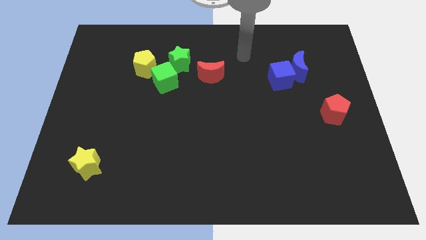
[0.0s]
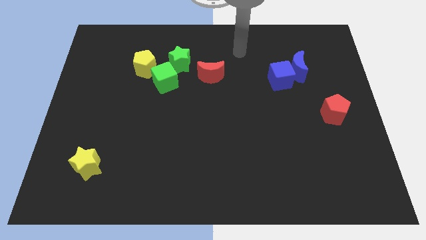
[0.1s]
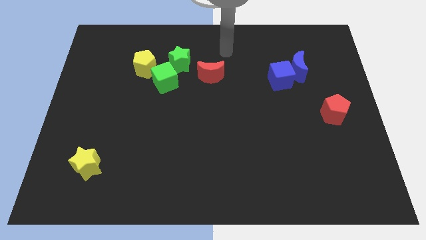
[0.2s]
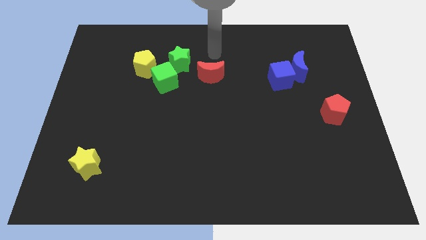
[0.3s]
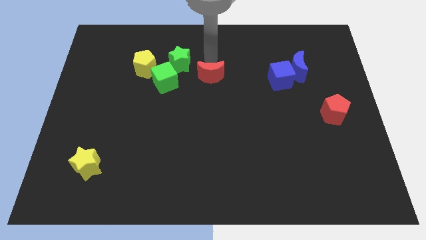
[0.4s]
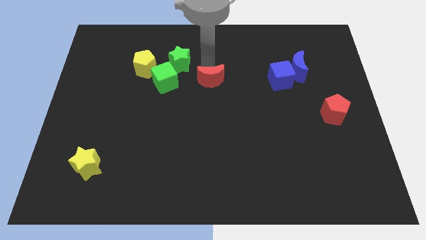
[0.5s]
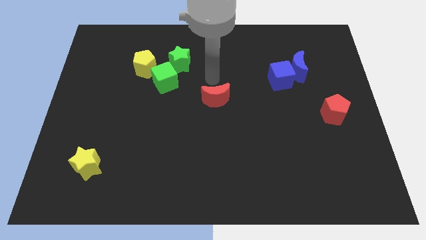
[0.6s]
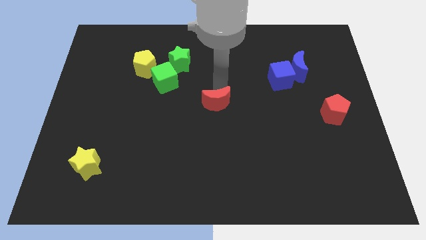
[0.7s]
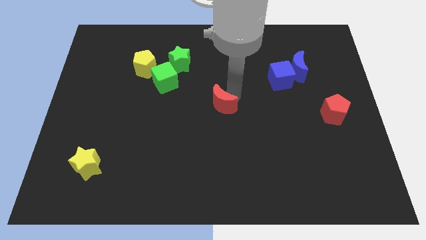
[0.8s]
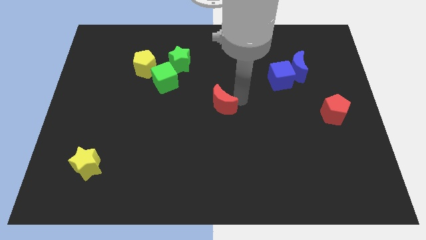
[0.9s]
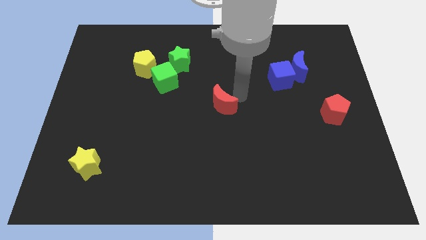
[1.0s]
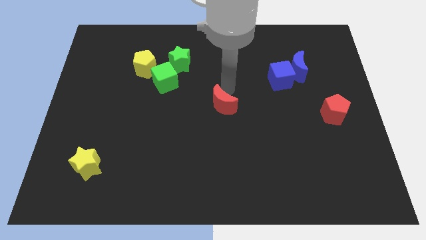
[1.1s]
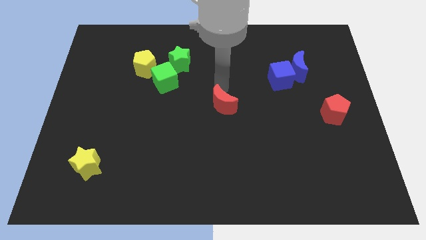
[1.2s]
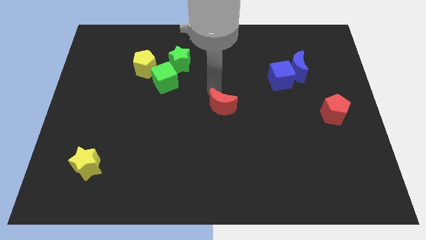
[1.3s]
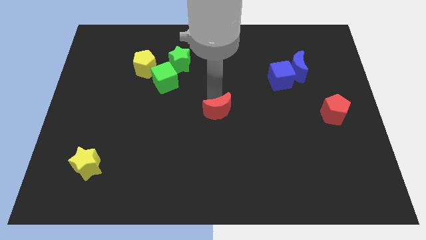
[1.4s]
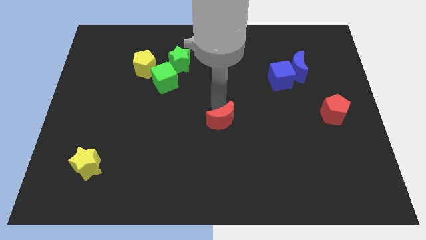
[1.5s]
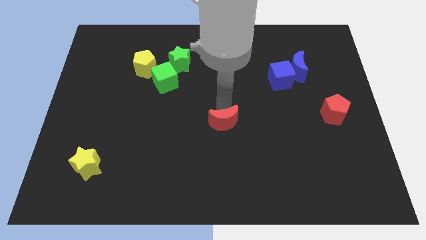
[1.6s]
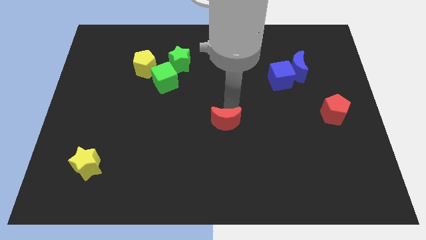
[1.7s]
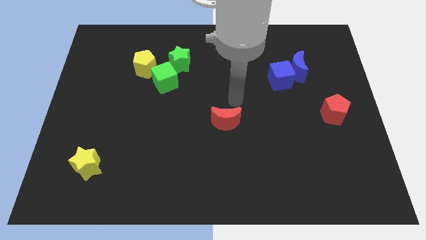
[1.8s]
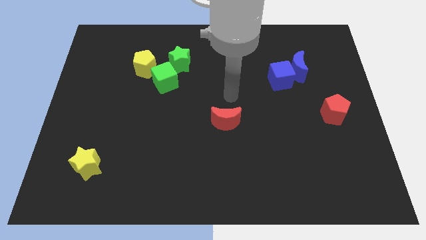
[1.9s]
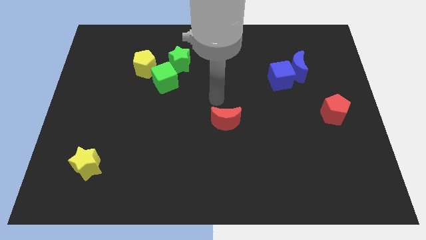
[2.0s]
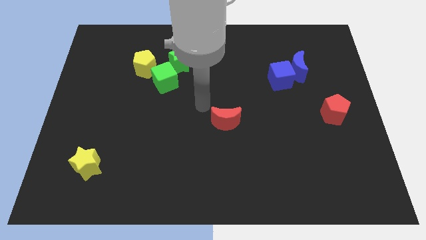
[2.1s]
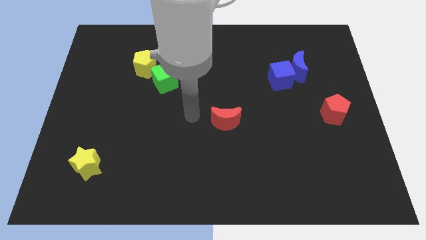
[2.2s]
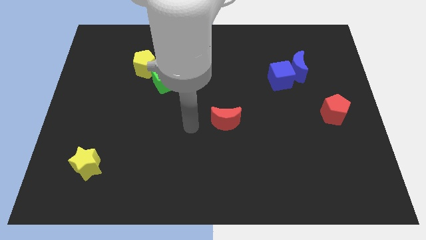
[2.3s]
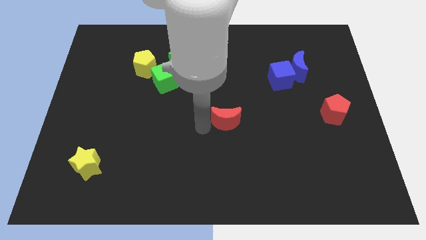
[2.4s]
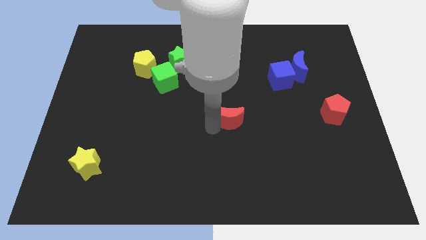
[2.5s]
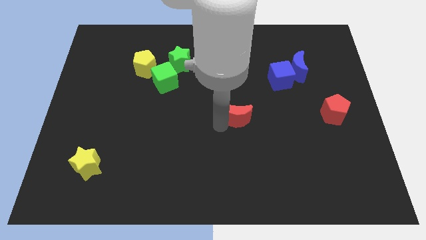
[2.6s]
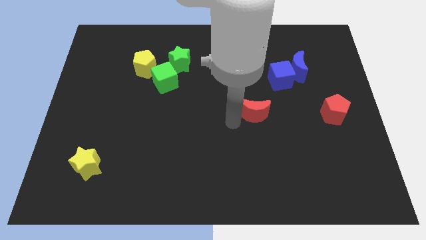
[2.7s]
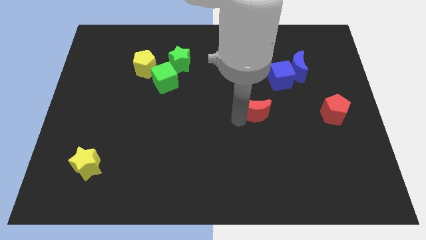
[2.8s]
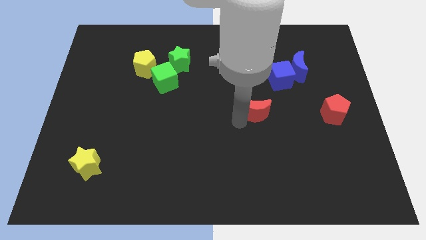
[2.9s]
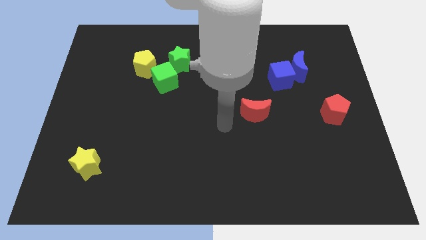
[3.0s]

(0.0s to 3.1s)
place the red moon parallel to red pentagon

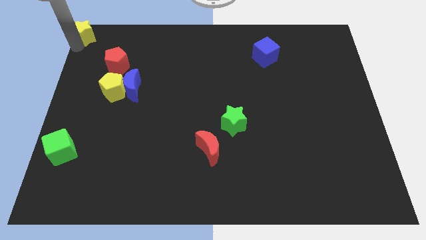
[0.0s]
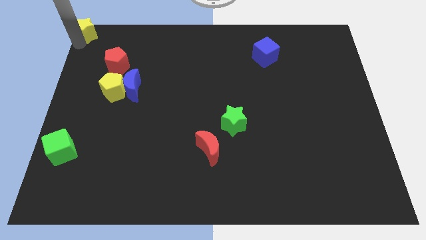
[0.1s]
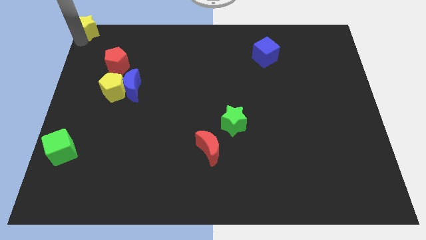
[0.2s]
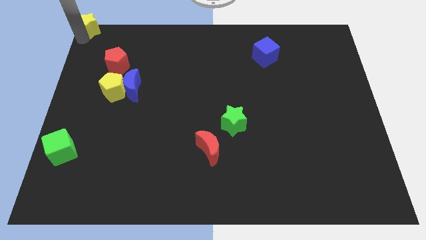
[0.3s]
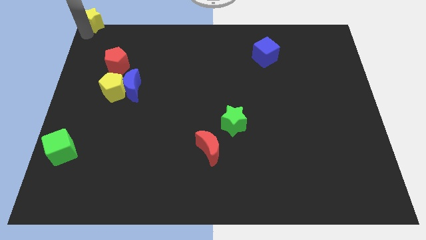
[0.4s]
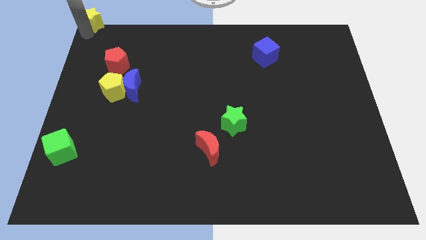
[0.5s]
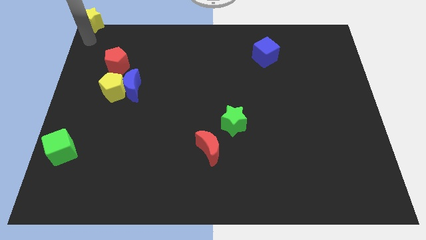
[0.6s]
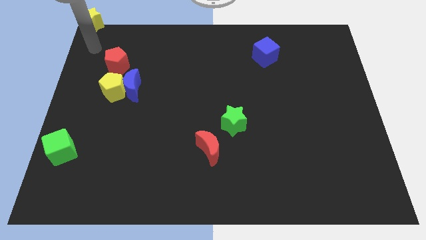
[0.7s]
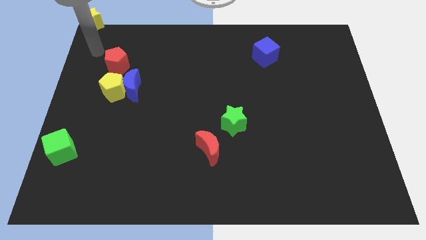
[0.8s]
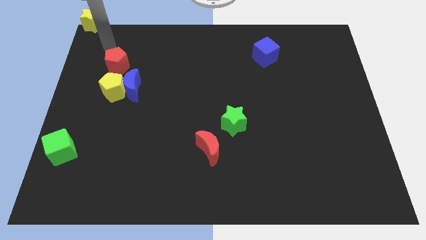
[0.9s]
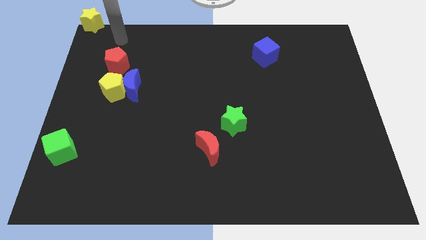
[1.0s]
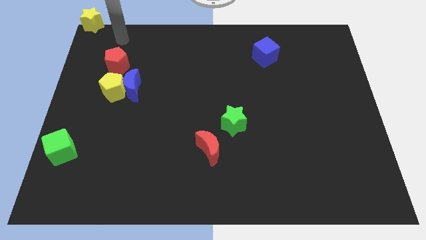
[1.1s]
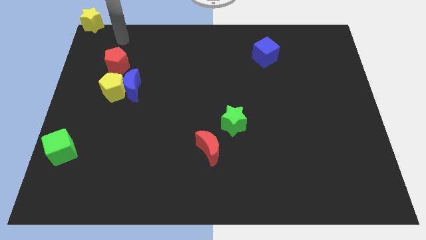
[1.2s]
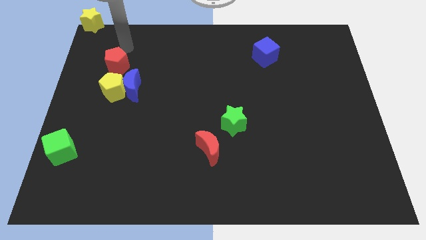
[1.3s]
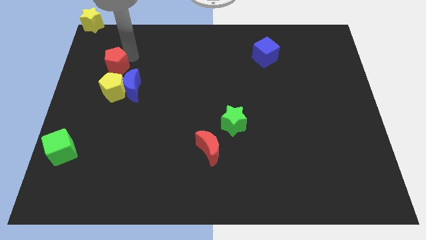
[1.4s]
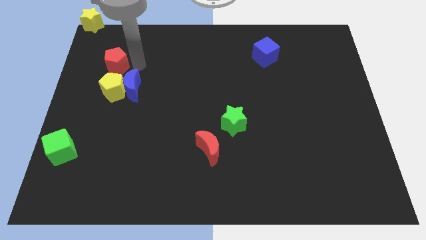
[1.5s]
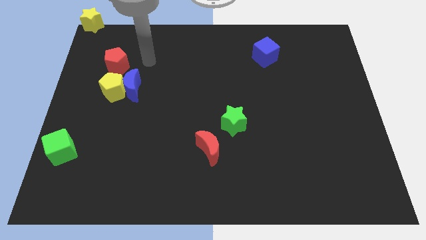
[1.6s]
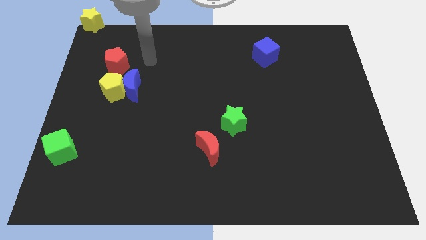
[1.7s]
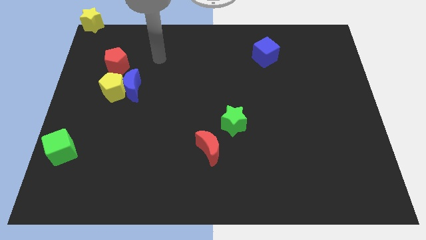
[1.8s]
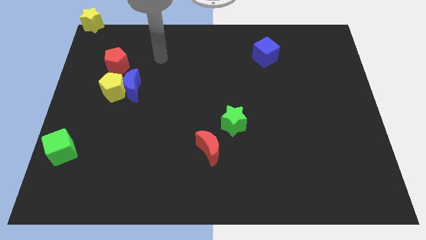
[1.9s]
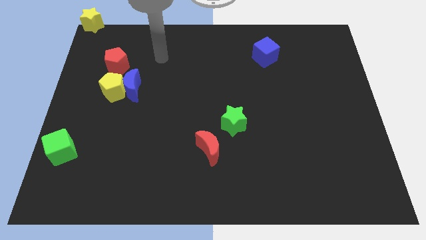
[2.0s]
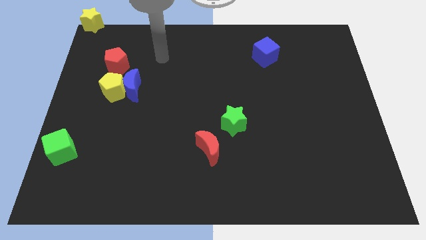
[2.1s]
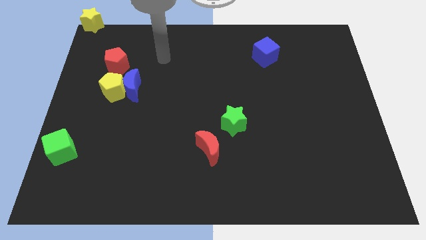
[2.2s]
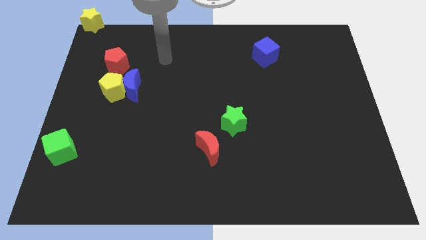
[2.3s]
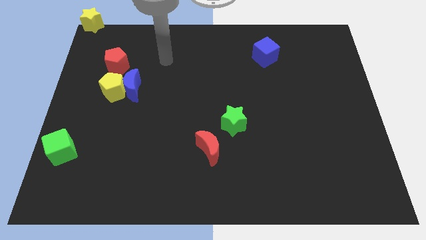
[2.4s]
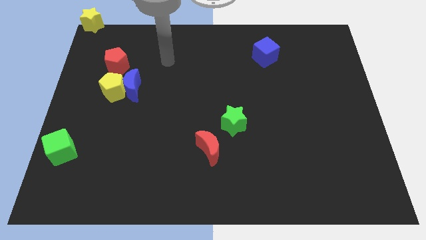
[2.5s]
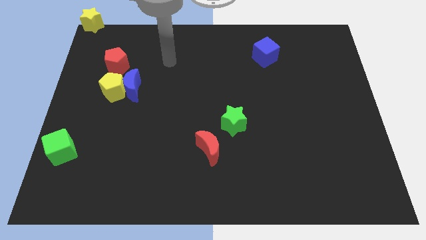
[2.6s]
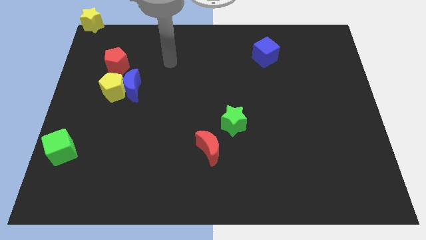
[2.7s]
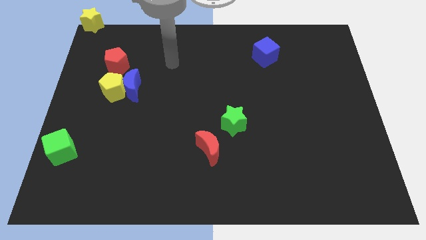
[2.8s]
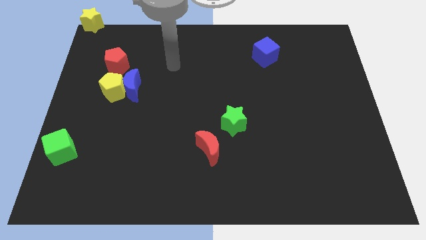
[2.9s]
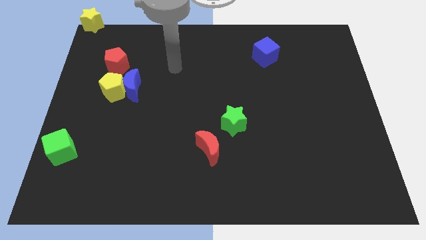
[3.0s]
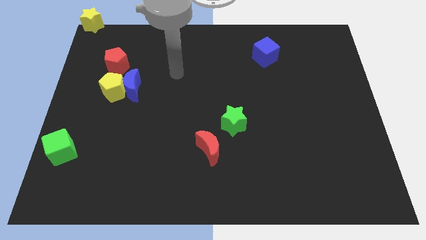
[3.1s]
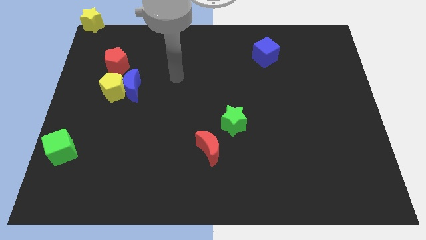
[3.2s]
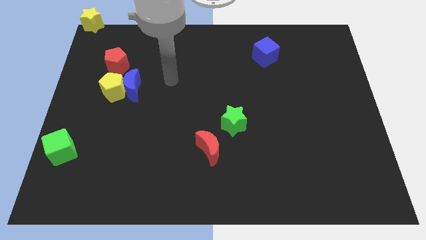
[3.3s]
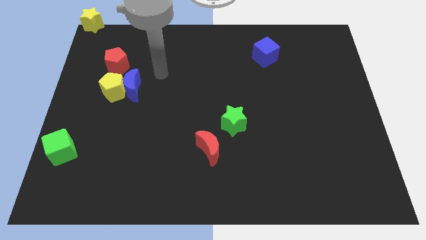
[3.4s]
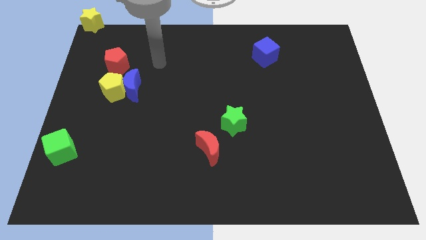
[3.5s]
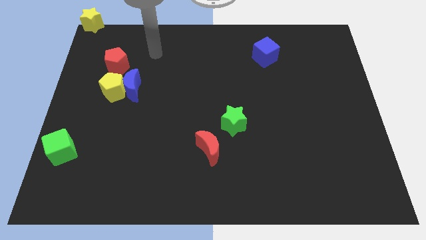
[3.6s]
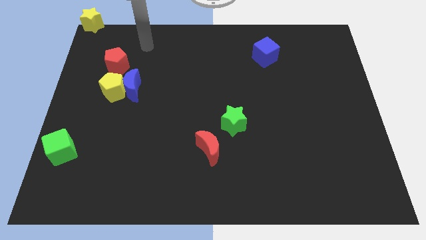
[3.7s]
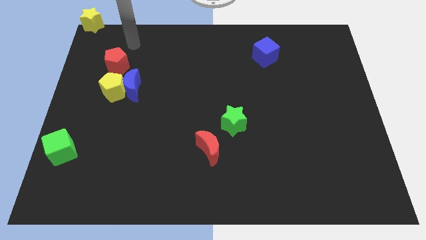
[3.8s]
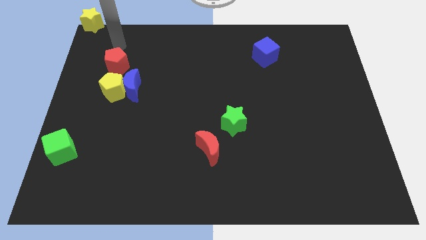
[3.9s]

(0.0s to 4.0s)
place your arm above the red pentagon

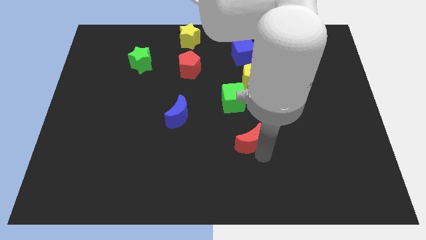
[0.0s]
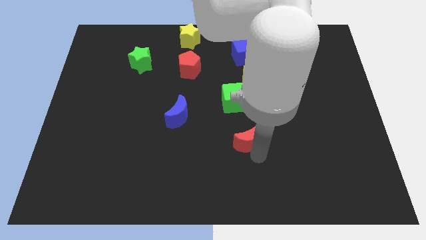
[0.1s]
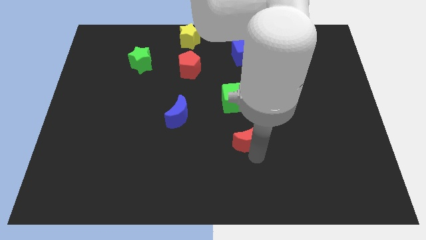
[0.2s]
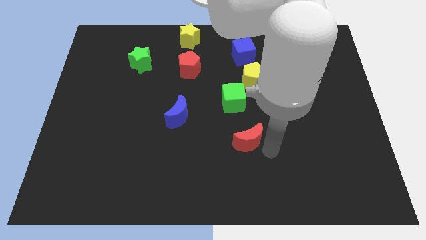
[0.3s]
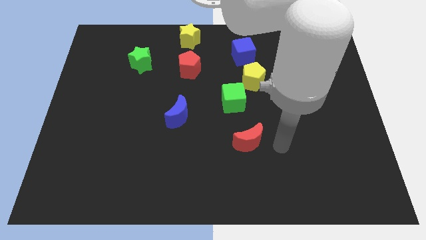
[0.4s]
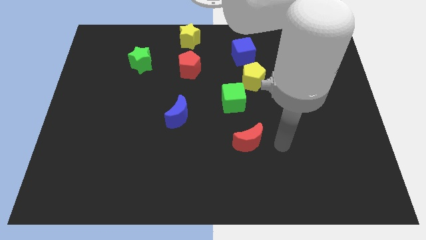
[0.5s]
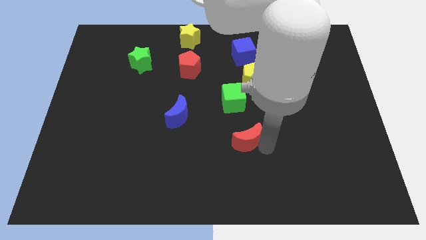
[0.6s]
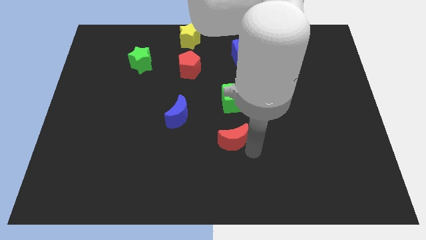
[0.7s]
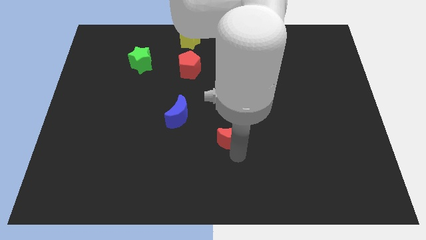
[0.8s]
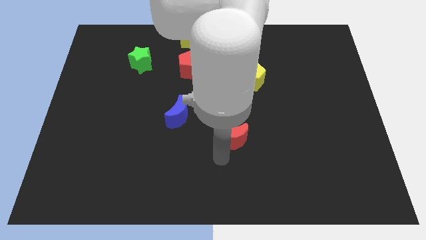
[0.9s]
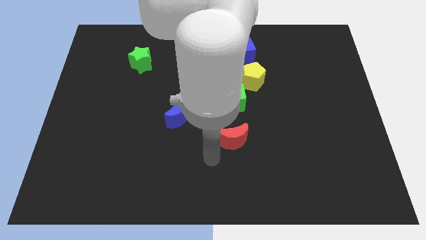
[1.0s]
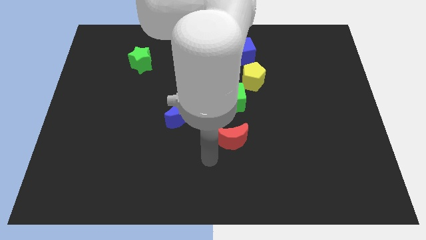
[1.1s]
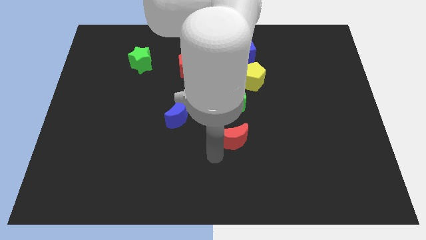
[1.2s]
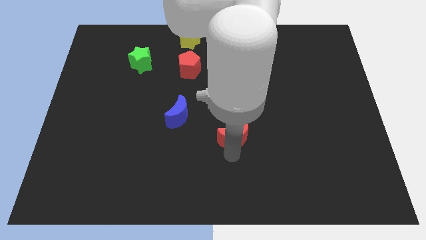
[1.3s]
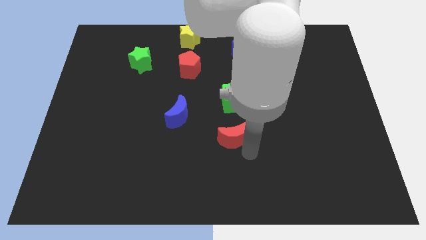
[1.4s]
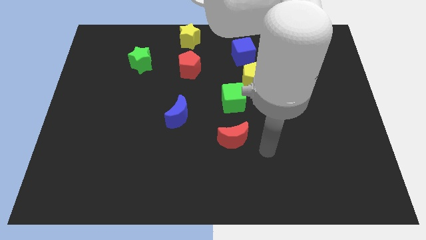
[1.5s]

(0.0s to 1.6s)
adjust the red moon vertically below the green cube

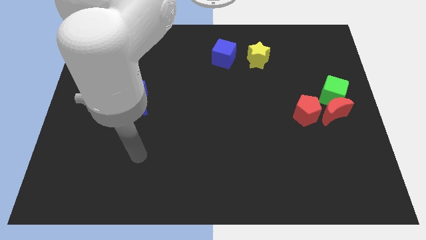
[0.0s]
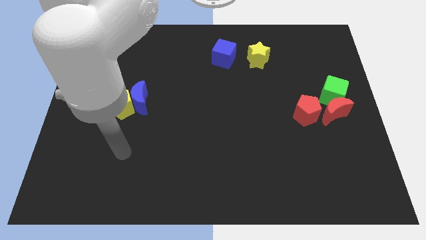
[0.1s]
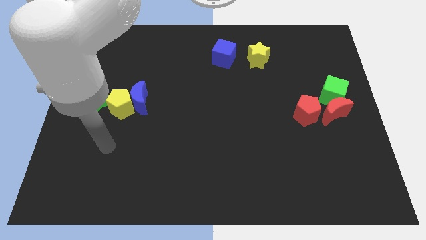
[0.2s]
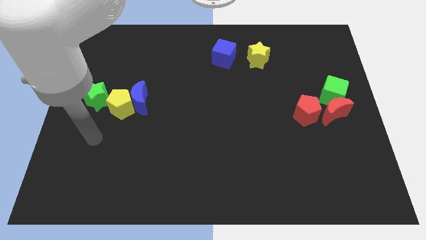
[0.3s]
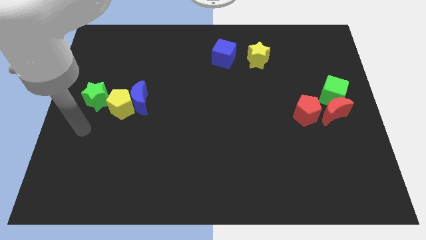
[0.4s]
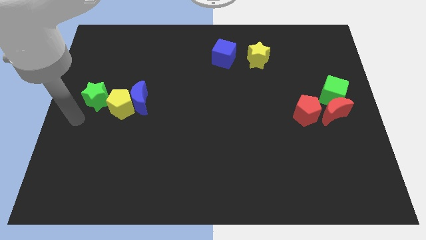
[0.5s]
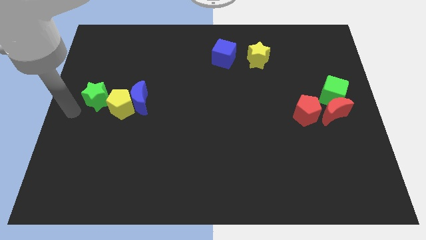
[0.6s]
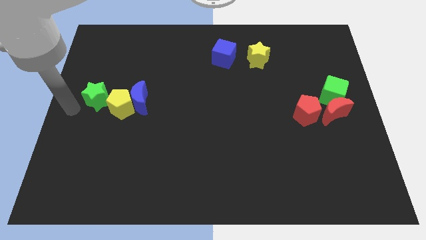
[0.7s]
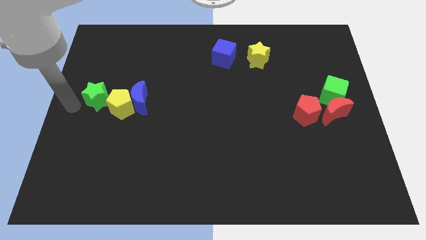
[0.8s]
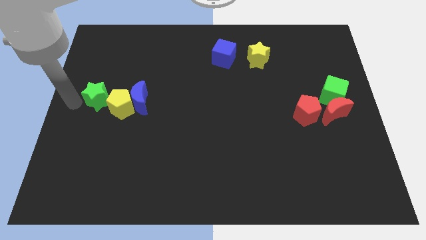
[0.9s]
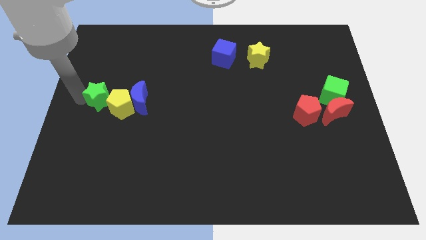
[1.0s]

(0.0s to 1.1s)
tap your arm to the left of green star
